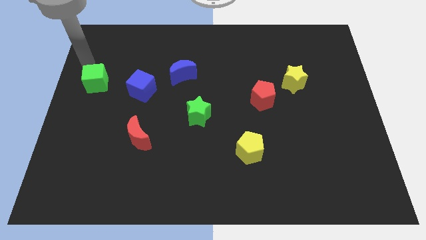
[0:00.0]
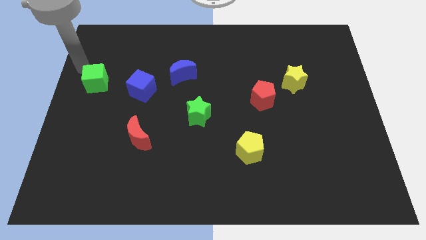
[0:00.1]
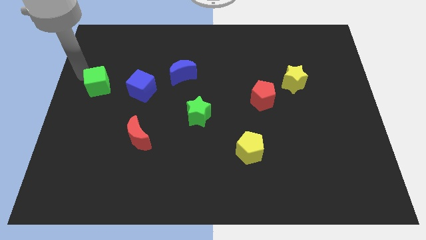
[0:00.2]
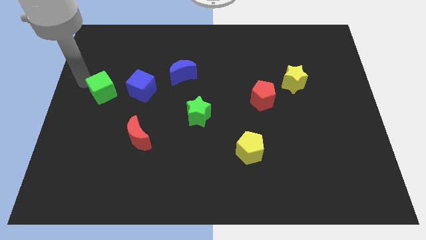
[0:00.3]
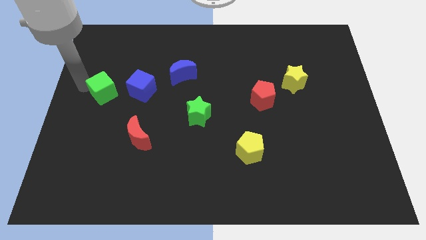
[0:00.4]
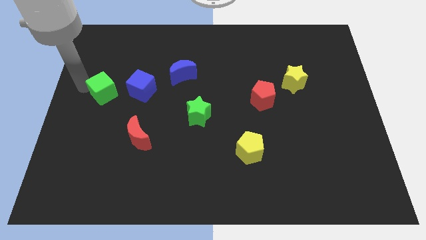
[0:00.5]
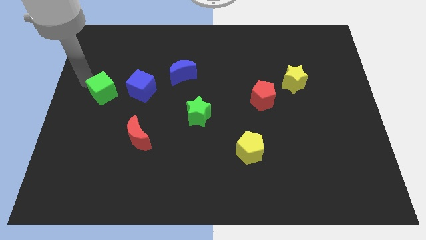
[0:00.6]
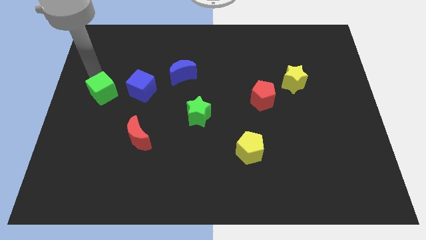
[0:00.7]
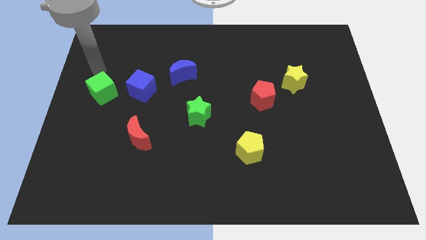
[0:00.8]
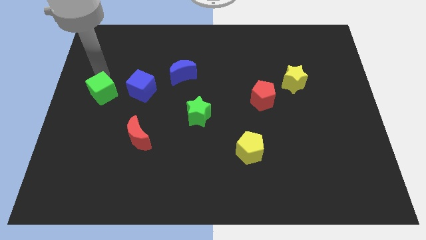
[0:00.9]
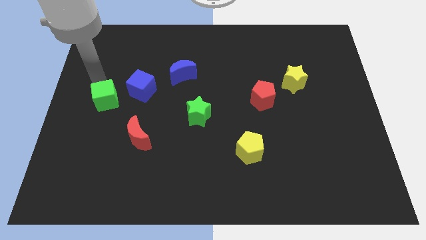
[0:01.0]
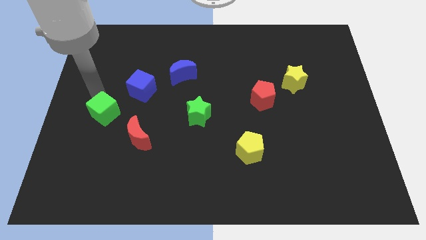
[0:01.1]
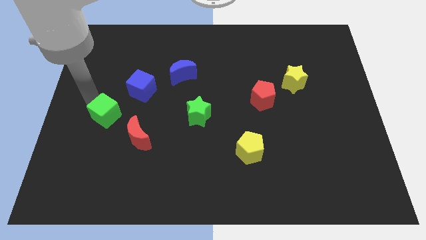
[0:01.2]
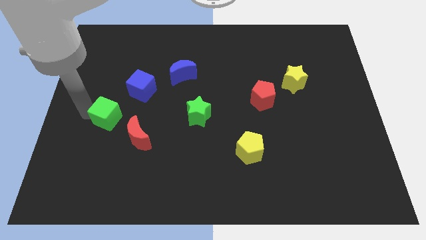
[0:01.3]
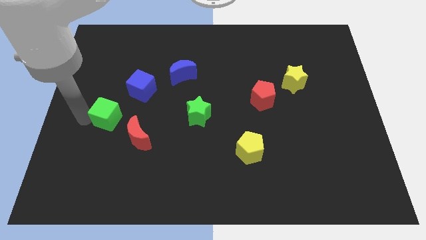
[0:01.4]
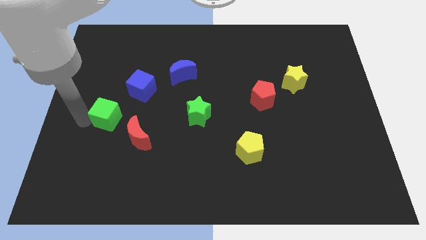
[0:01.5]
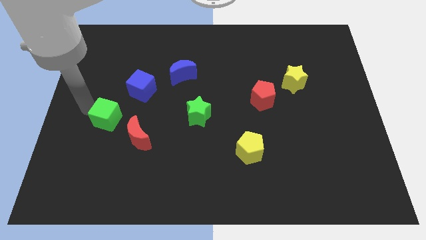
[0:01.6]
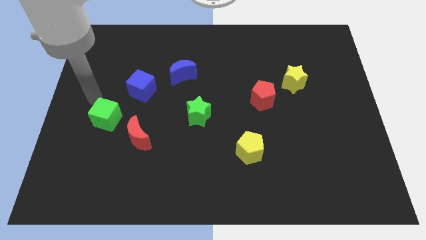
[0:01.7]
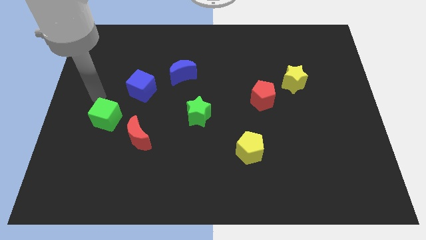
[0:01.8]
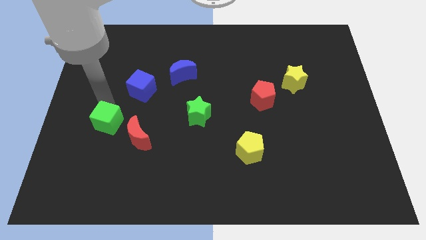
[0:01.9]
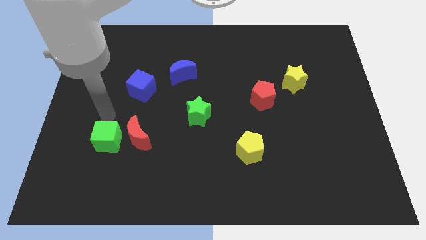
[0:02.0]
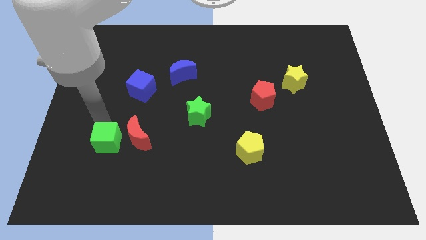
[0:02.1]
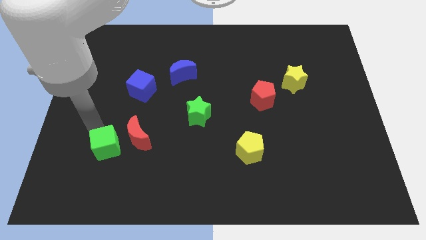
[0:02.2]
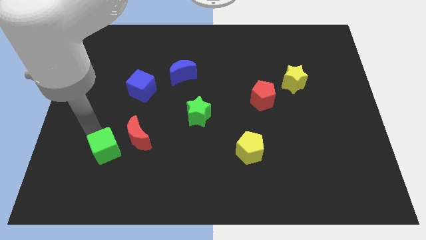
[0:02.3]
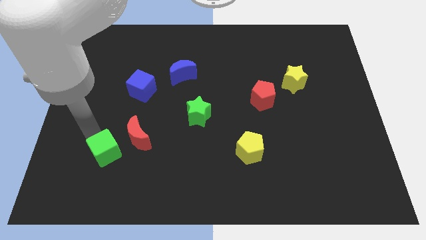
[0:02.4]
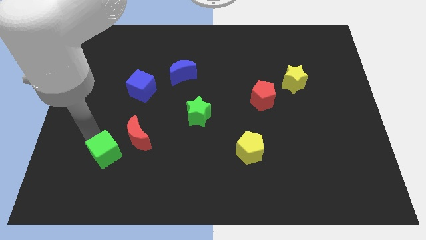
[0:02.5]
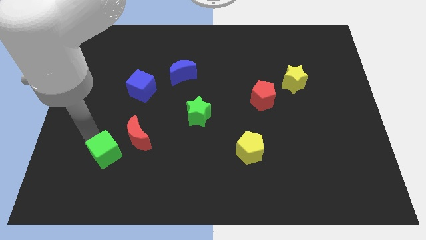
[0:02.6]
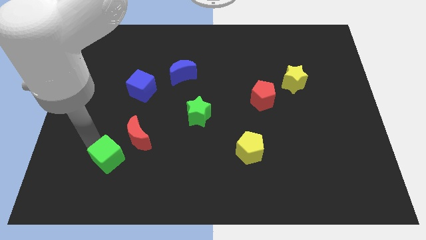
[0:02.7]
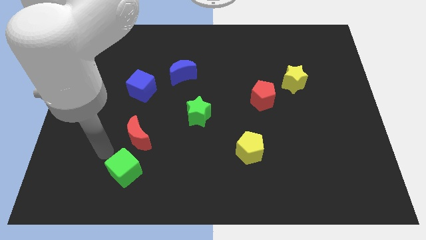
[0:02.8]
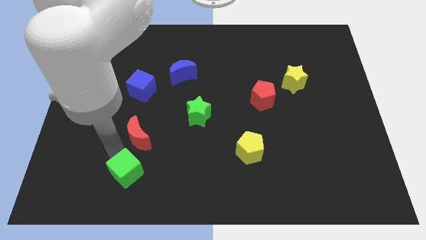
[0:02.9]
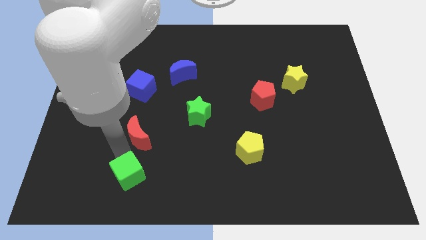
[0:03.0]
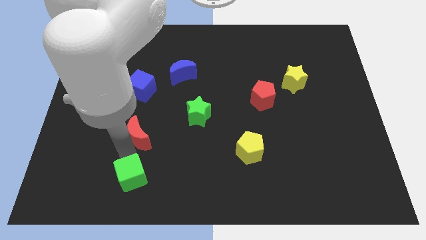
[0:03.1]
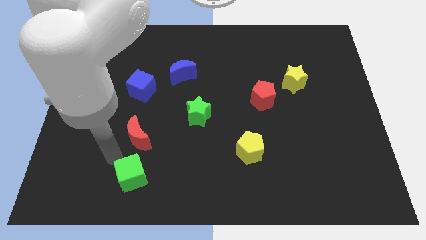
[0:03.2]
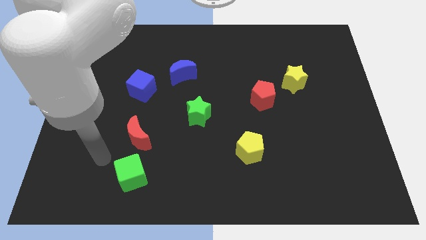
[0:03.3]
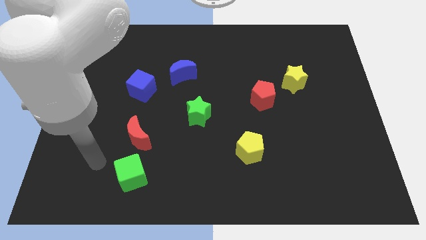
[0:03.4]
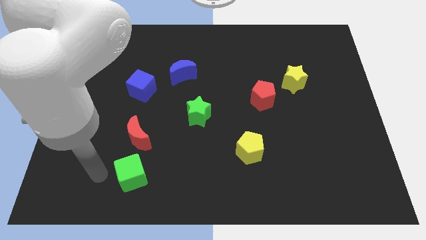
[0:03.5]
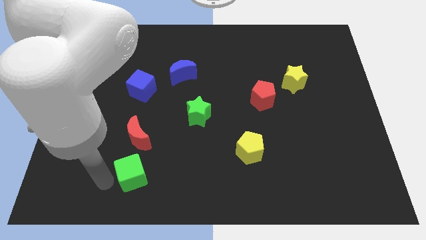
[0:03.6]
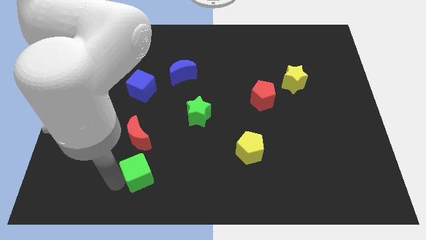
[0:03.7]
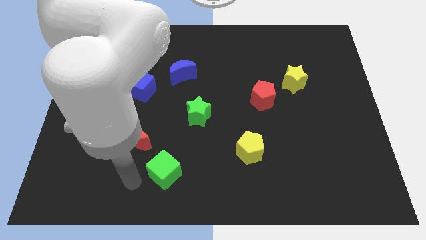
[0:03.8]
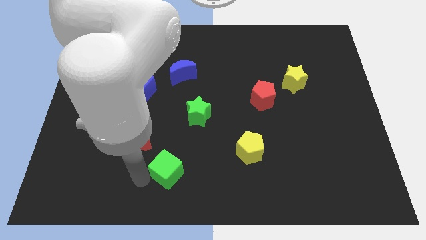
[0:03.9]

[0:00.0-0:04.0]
move the green cube to the bottom of red crescent

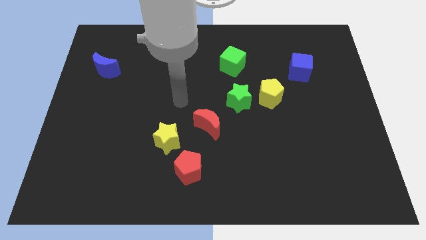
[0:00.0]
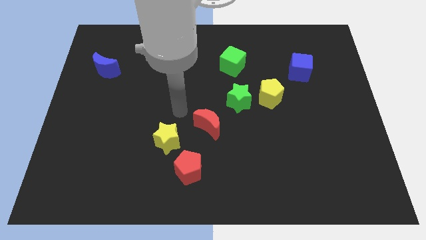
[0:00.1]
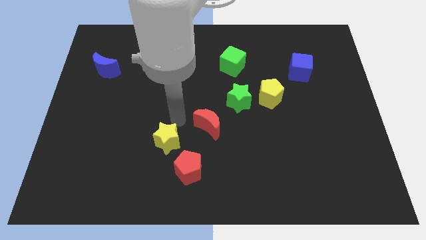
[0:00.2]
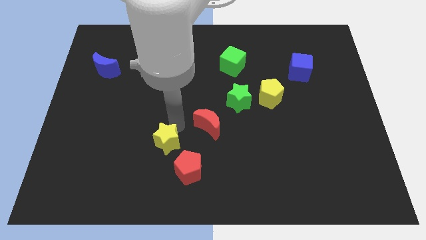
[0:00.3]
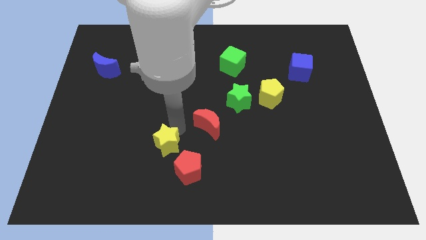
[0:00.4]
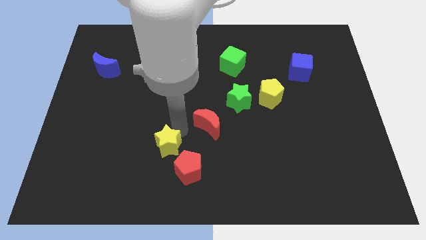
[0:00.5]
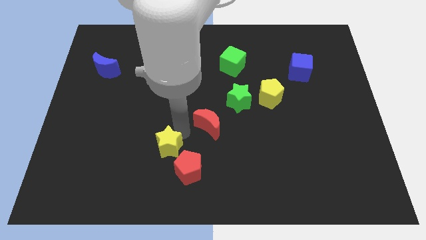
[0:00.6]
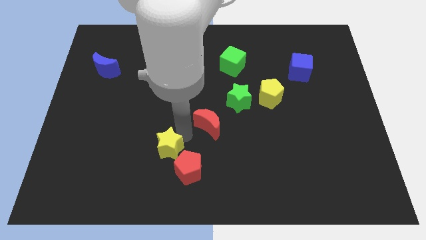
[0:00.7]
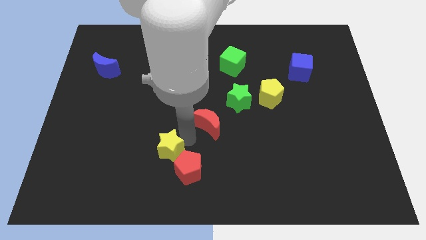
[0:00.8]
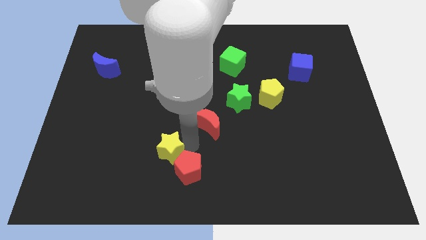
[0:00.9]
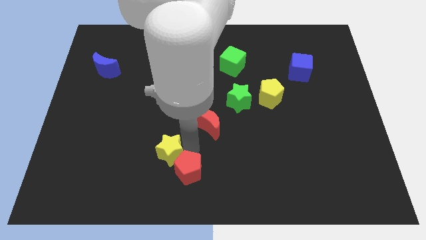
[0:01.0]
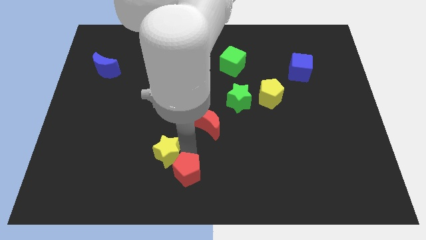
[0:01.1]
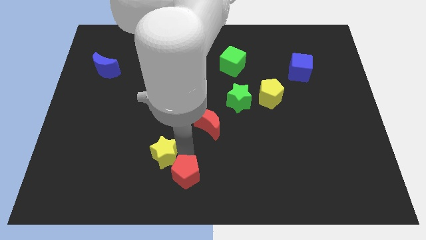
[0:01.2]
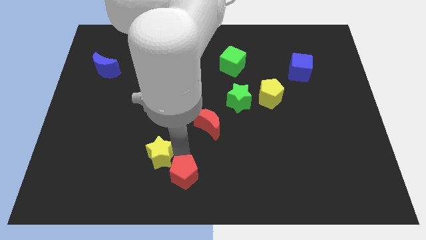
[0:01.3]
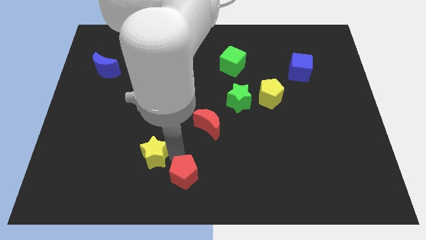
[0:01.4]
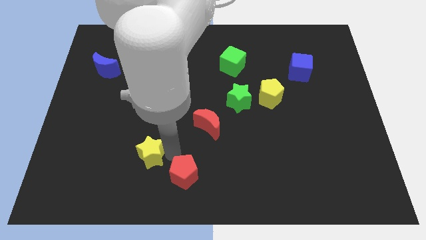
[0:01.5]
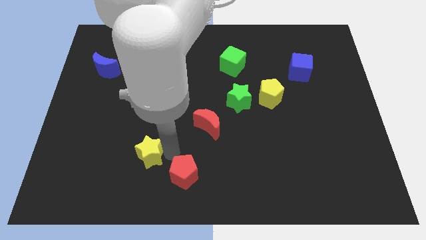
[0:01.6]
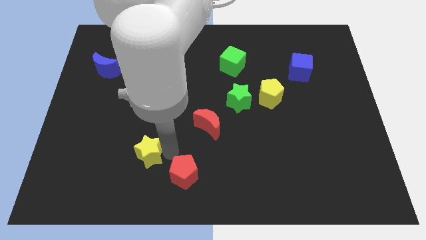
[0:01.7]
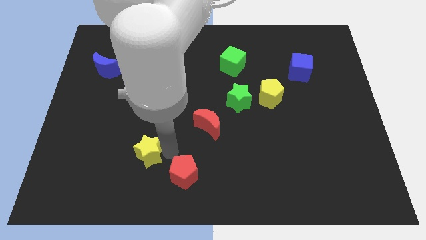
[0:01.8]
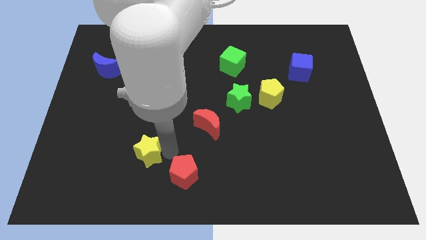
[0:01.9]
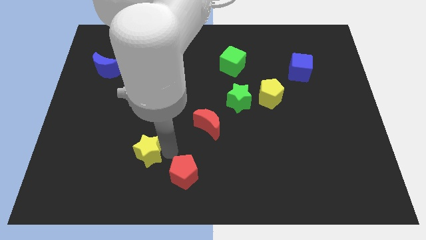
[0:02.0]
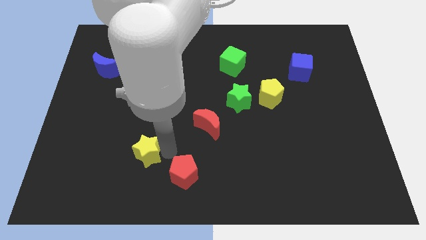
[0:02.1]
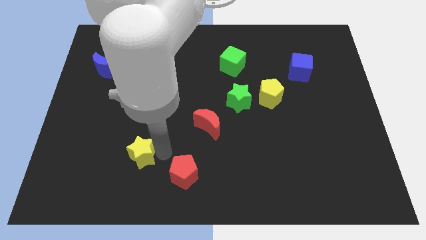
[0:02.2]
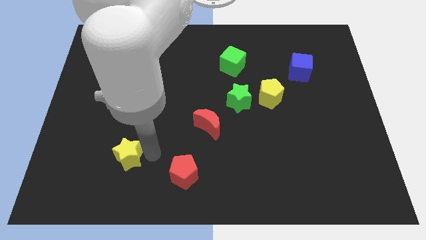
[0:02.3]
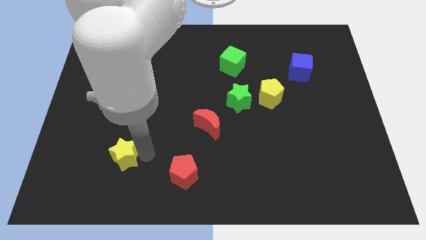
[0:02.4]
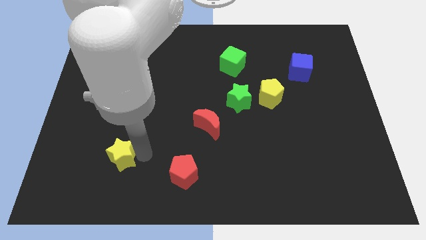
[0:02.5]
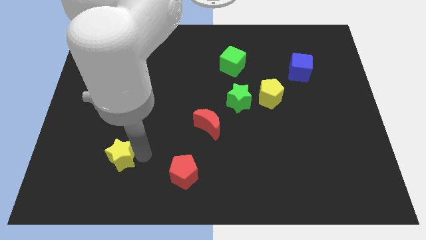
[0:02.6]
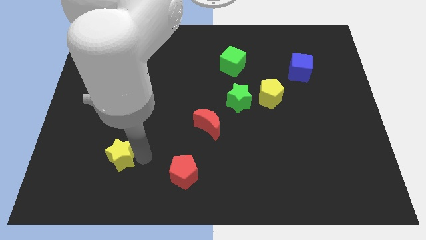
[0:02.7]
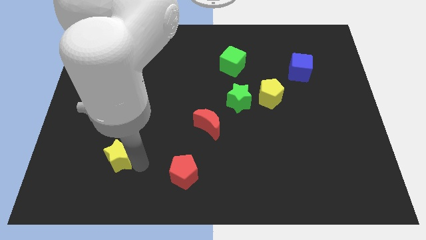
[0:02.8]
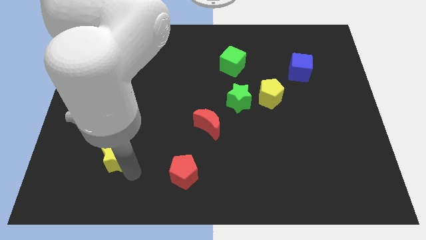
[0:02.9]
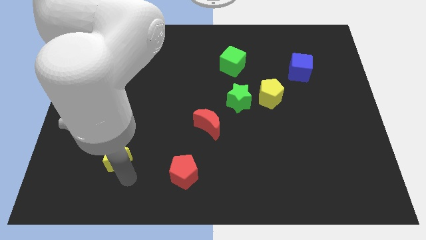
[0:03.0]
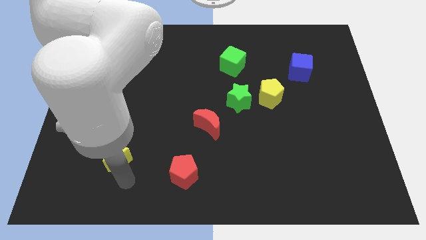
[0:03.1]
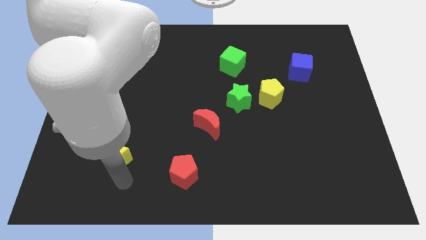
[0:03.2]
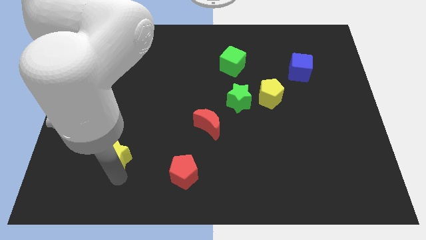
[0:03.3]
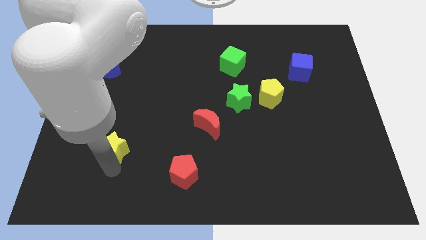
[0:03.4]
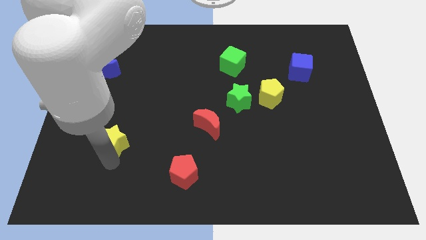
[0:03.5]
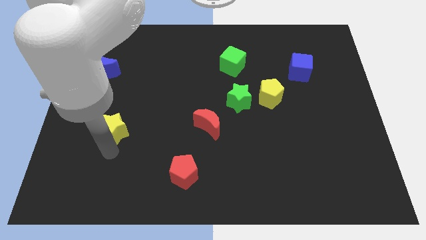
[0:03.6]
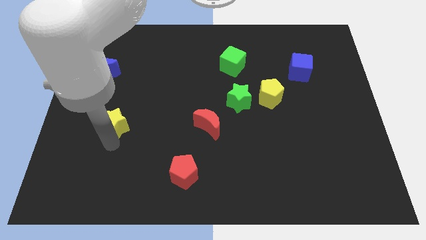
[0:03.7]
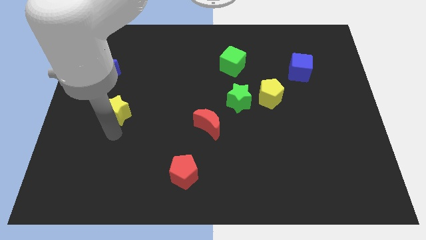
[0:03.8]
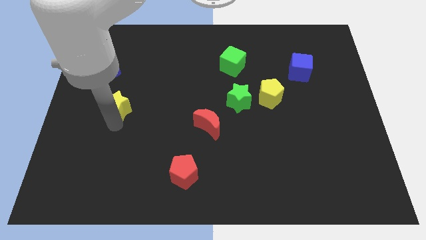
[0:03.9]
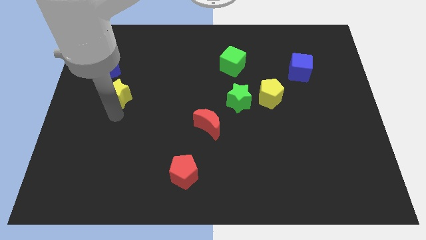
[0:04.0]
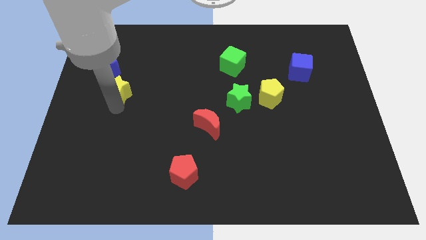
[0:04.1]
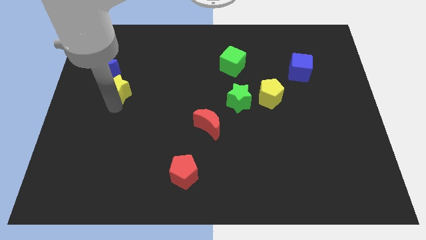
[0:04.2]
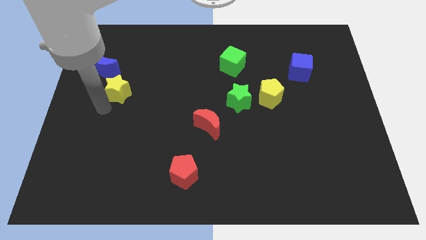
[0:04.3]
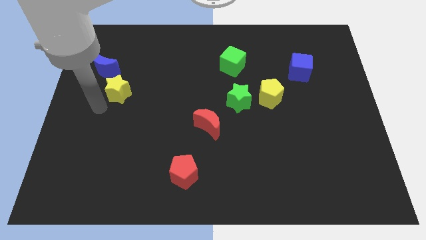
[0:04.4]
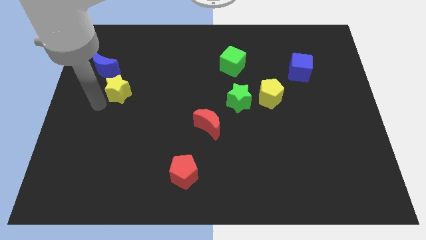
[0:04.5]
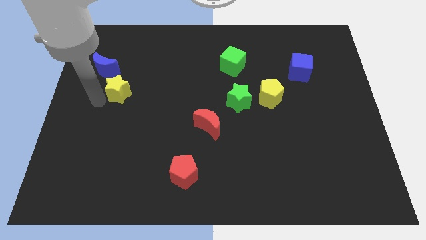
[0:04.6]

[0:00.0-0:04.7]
place yellow star to the bottom of the blue crescent

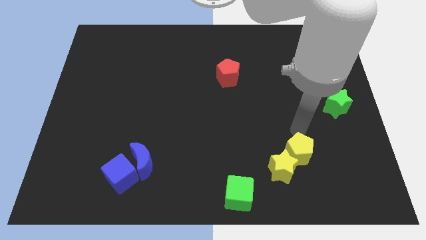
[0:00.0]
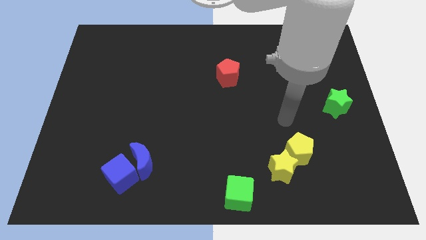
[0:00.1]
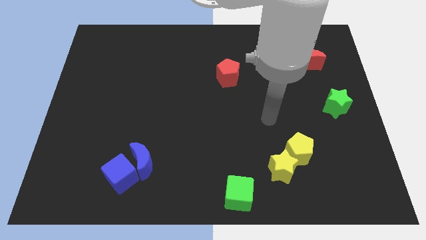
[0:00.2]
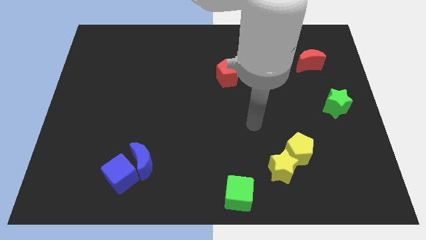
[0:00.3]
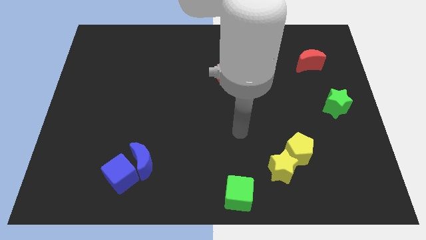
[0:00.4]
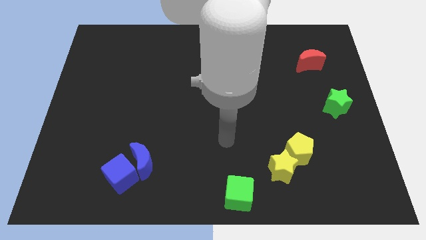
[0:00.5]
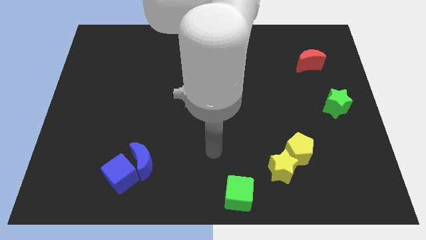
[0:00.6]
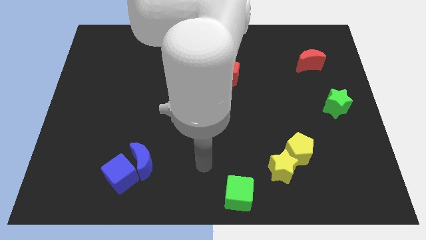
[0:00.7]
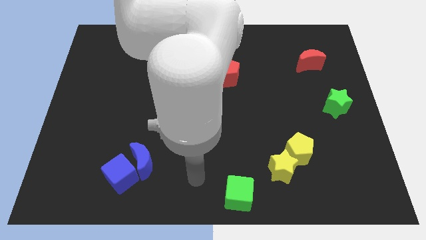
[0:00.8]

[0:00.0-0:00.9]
move your arm away from yellow pentagon
